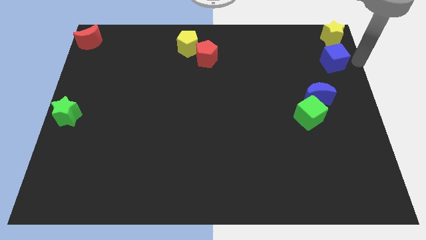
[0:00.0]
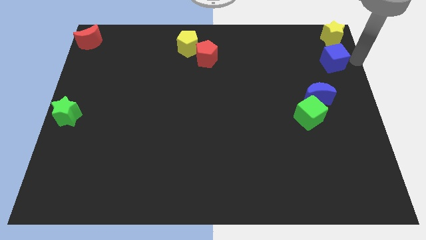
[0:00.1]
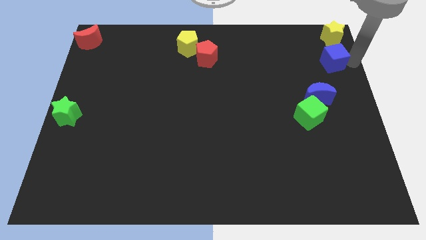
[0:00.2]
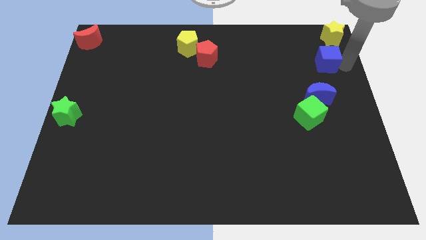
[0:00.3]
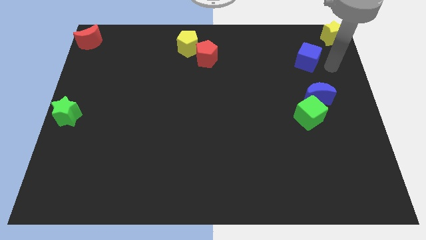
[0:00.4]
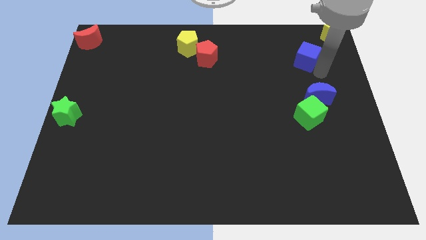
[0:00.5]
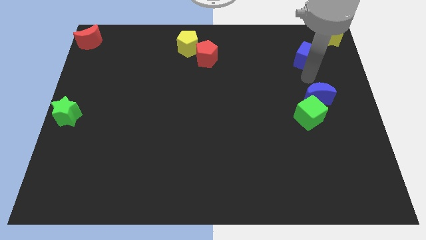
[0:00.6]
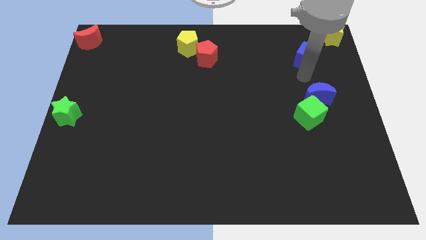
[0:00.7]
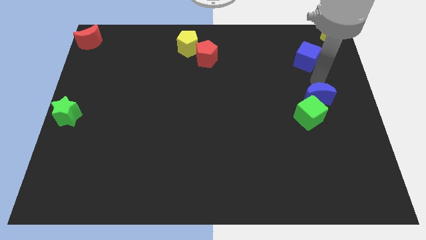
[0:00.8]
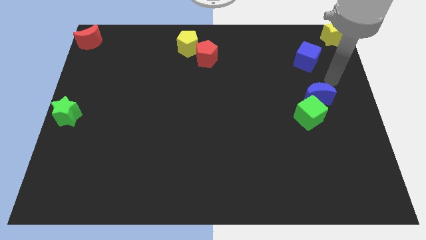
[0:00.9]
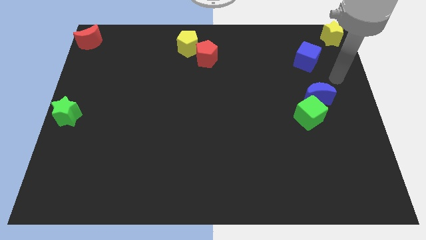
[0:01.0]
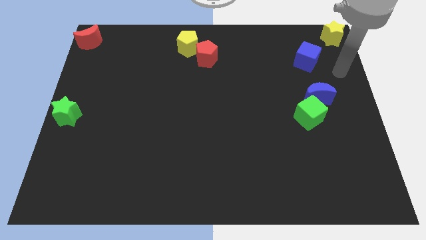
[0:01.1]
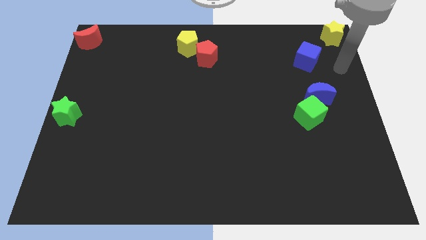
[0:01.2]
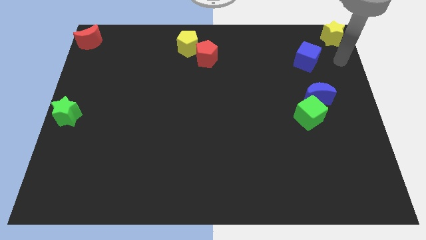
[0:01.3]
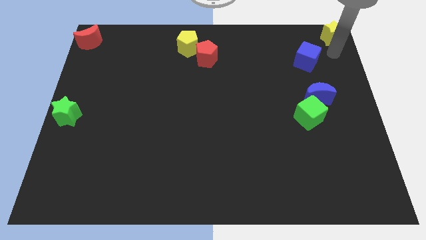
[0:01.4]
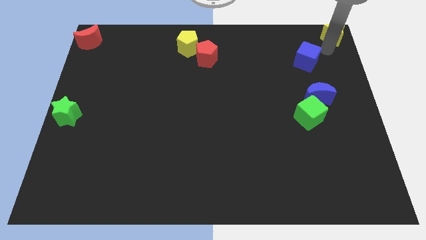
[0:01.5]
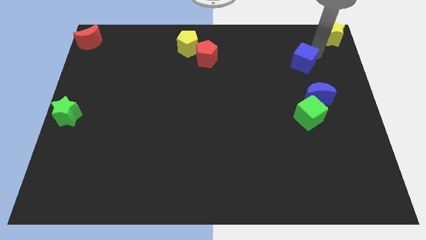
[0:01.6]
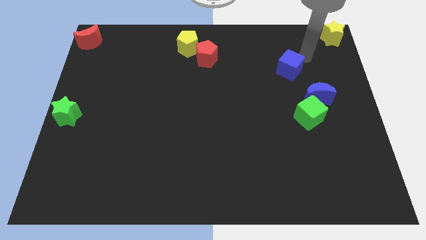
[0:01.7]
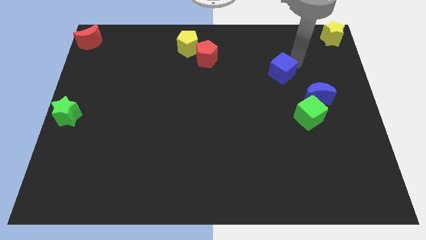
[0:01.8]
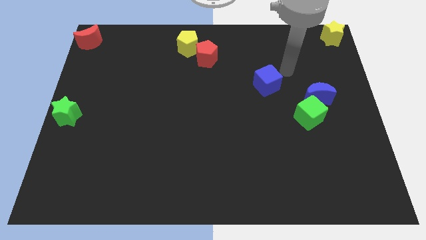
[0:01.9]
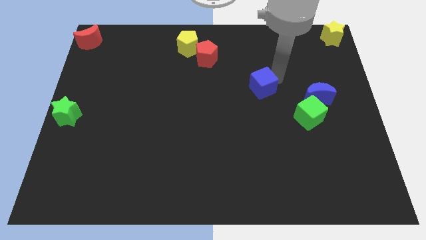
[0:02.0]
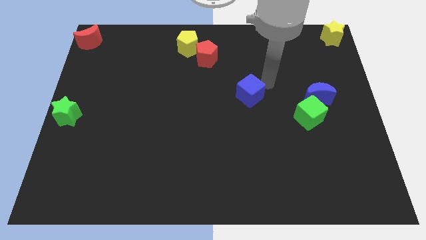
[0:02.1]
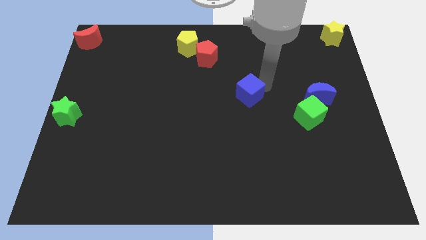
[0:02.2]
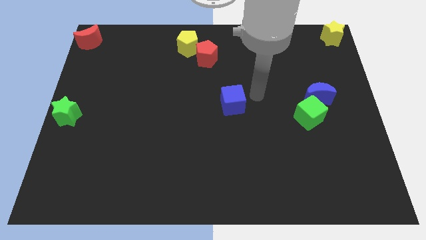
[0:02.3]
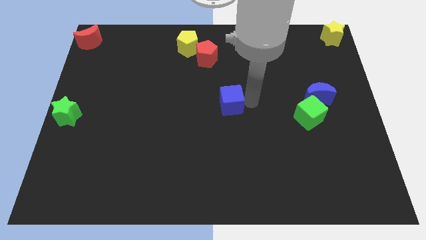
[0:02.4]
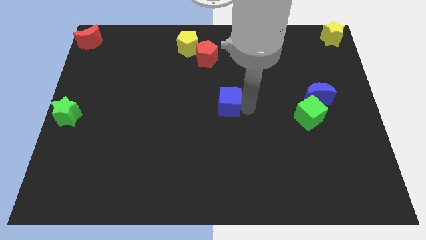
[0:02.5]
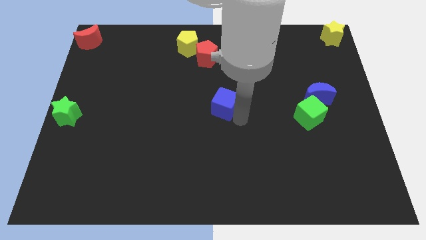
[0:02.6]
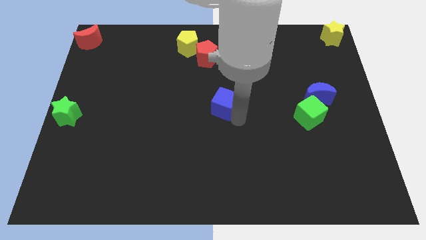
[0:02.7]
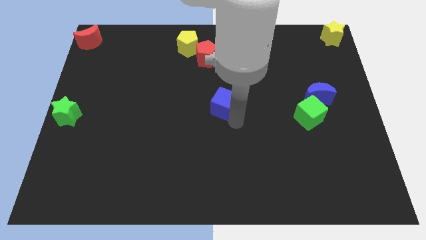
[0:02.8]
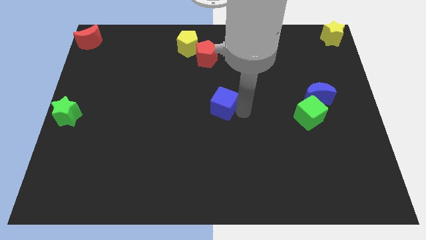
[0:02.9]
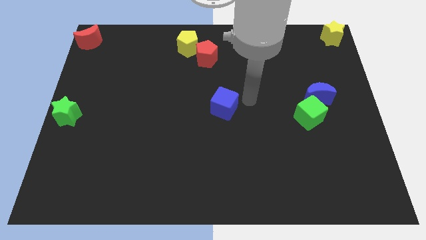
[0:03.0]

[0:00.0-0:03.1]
drag the blue cube to the center of the board

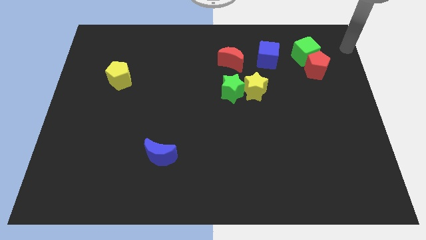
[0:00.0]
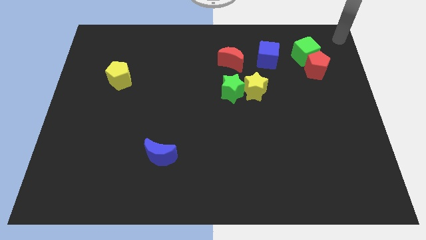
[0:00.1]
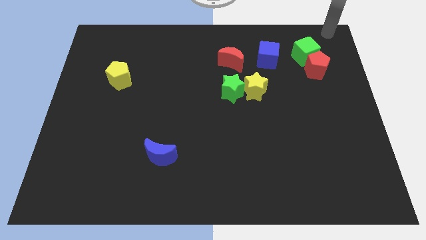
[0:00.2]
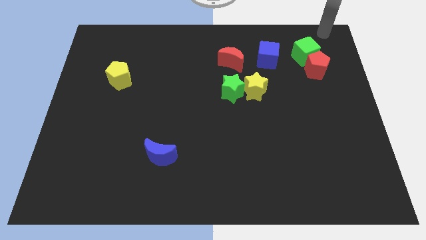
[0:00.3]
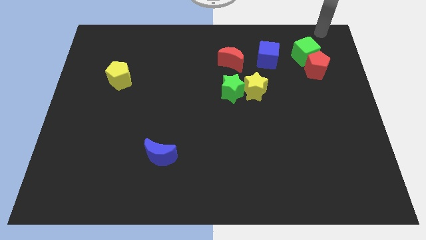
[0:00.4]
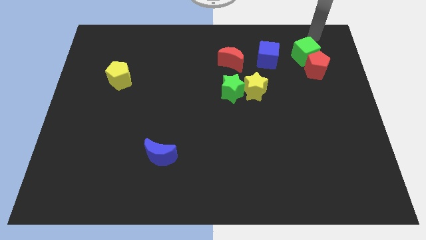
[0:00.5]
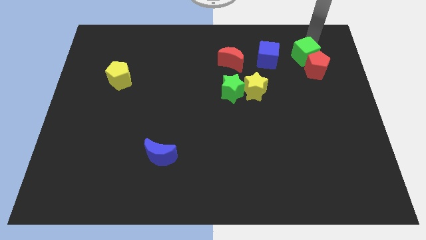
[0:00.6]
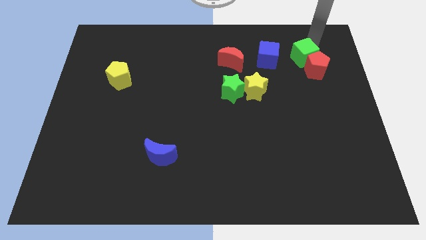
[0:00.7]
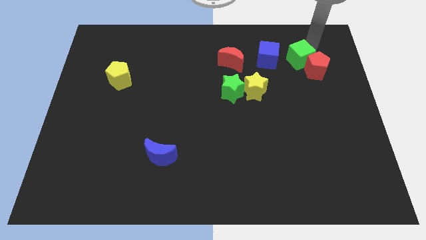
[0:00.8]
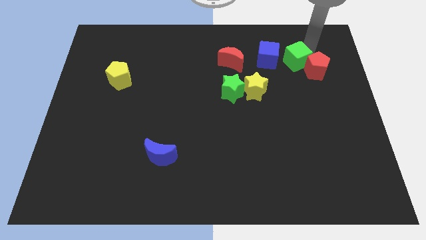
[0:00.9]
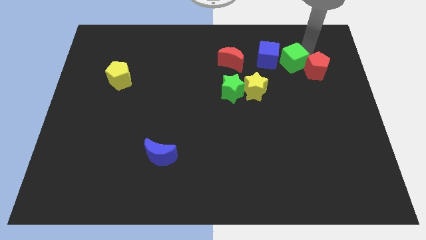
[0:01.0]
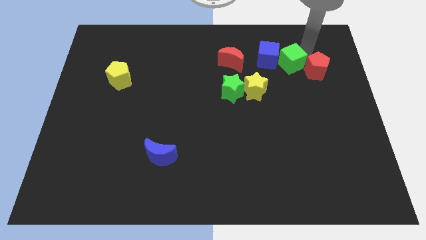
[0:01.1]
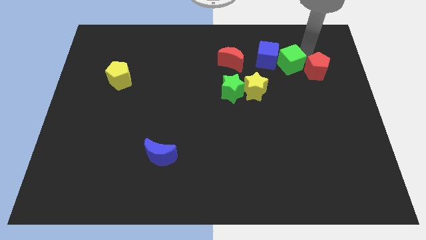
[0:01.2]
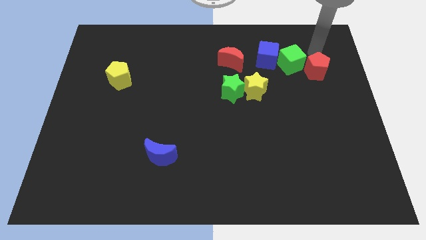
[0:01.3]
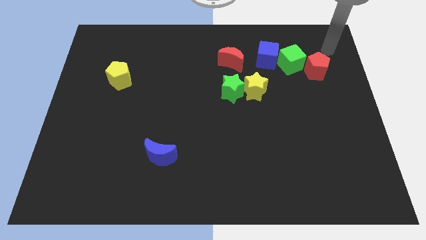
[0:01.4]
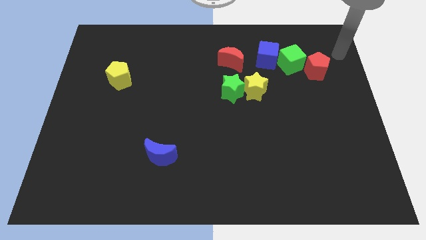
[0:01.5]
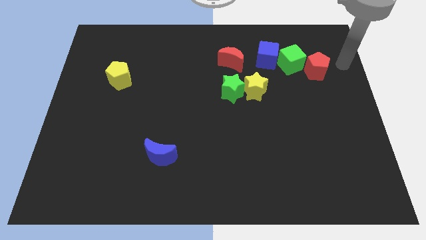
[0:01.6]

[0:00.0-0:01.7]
move the green cube close to the right of the blue cube

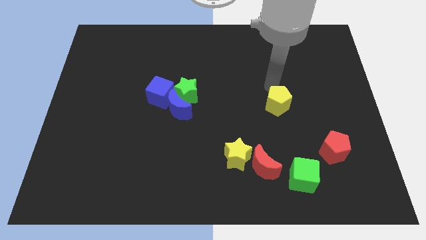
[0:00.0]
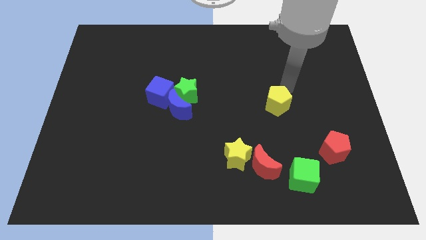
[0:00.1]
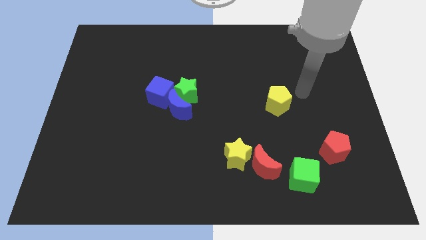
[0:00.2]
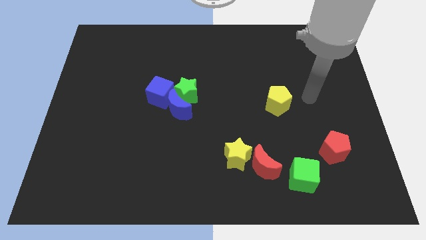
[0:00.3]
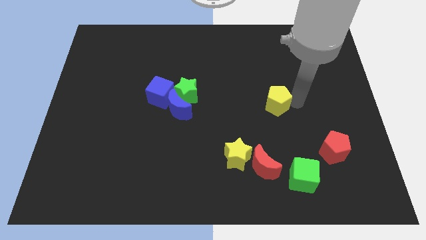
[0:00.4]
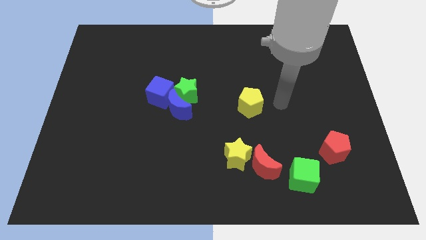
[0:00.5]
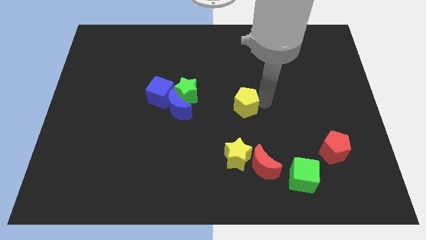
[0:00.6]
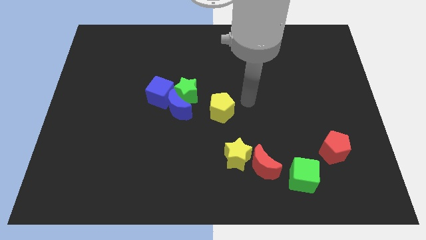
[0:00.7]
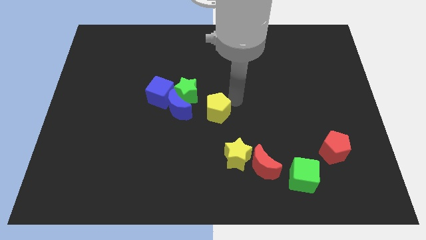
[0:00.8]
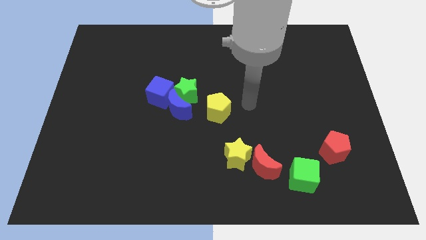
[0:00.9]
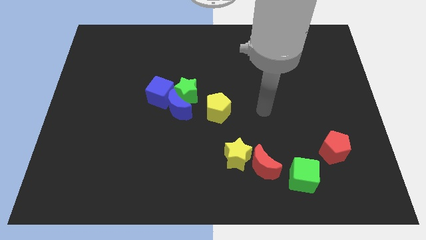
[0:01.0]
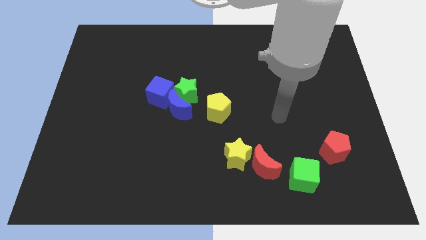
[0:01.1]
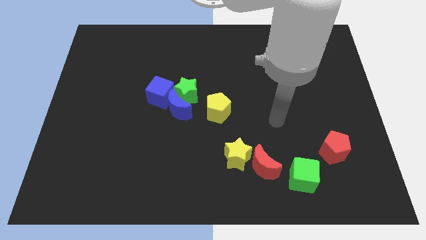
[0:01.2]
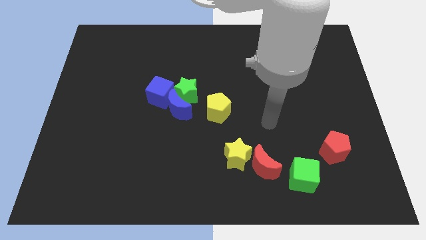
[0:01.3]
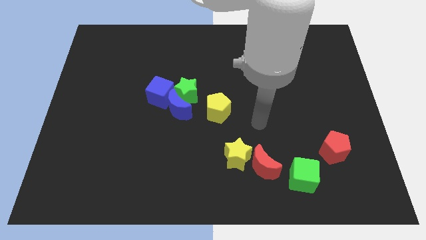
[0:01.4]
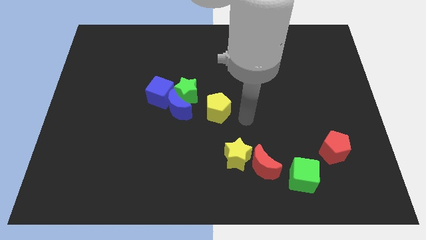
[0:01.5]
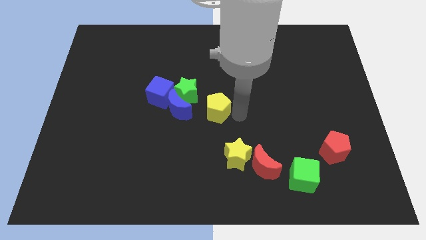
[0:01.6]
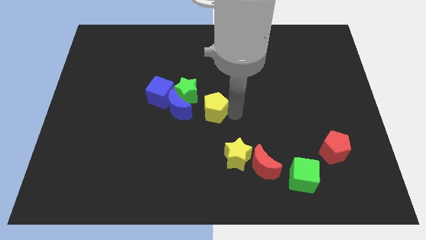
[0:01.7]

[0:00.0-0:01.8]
move the yellow pentagon below right to the green star

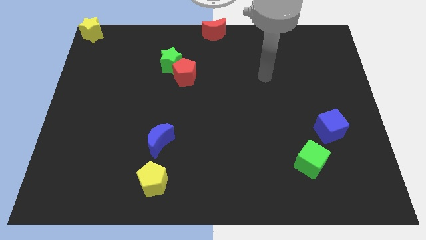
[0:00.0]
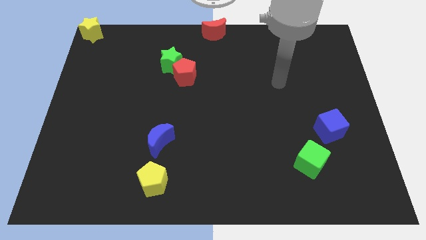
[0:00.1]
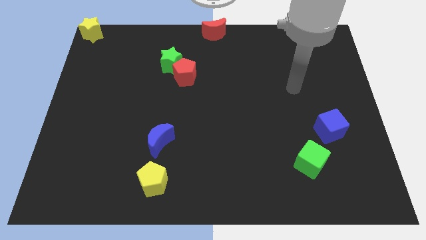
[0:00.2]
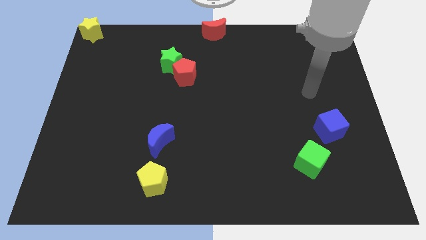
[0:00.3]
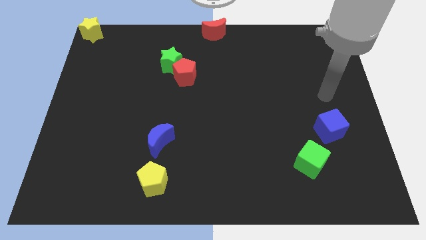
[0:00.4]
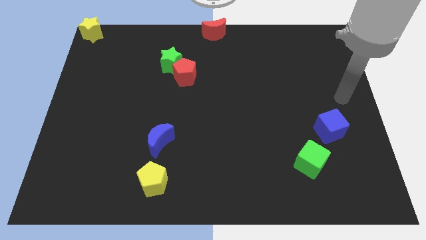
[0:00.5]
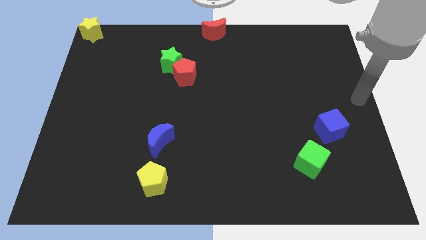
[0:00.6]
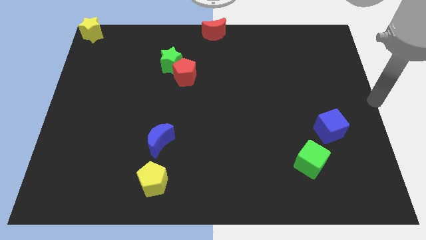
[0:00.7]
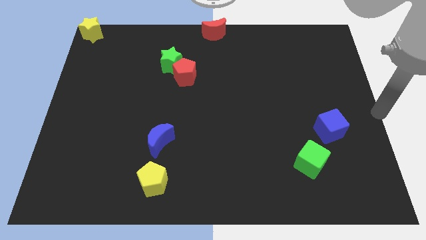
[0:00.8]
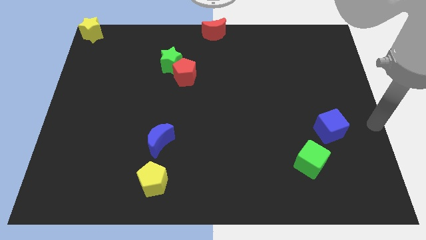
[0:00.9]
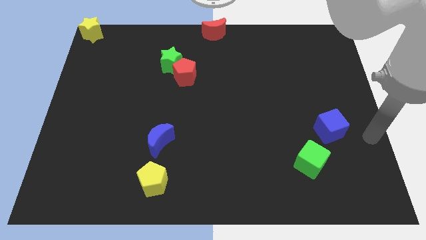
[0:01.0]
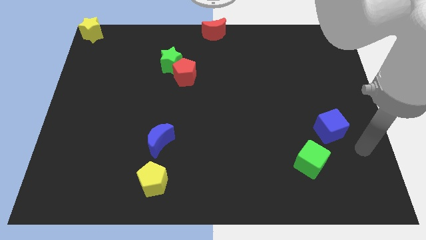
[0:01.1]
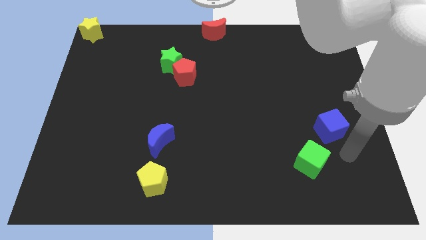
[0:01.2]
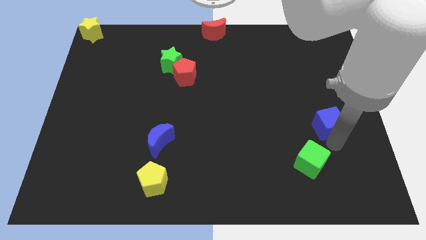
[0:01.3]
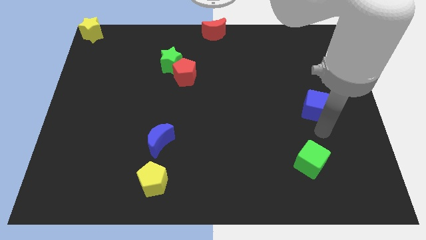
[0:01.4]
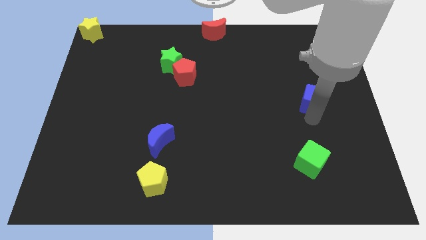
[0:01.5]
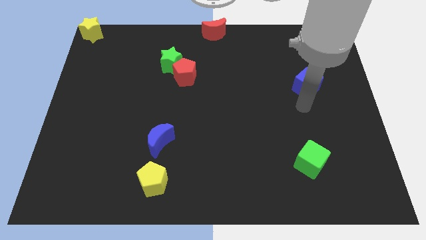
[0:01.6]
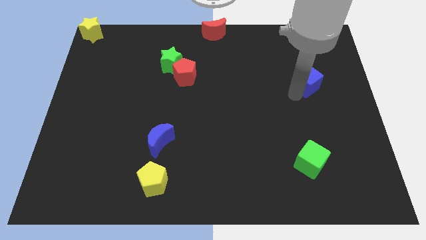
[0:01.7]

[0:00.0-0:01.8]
move the blue board towards top right side of the board

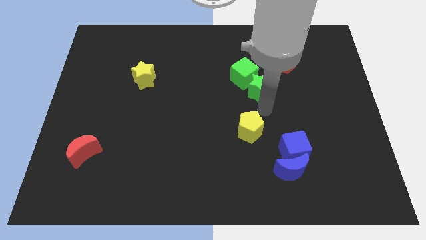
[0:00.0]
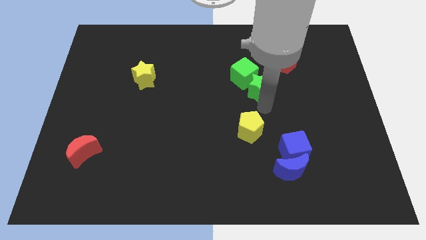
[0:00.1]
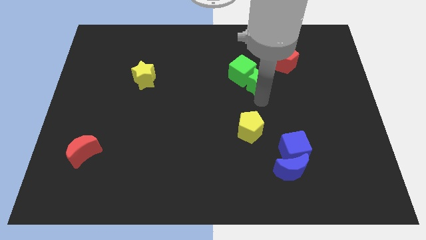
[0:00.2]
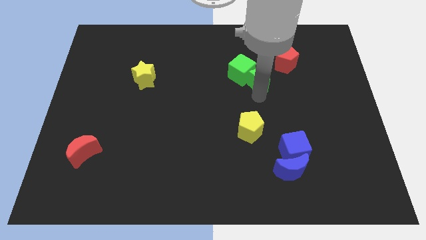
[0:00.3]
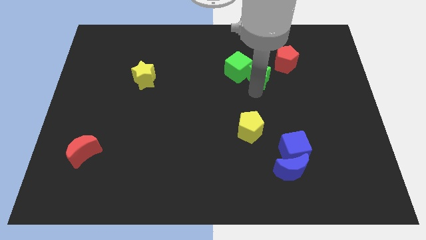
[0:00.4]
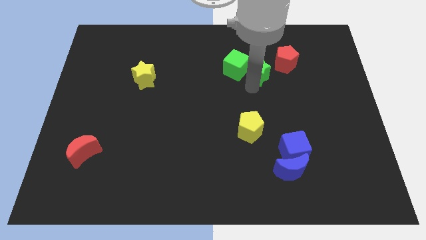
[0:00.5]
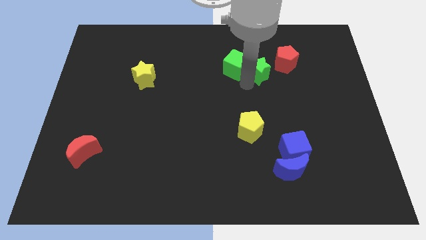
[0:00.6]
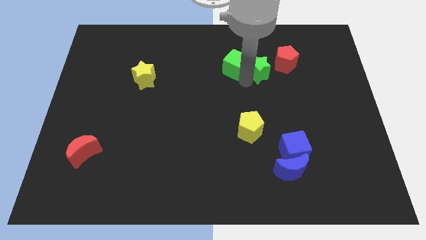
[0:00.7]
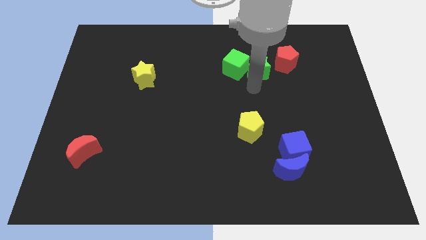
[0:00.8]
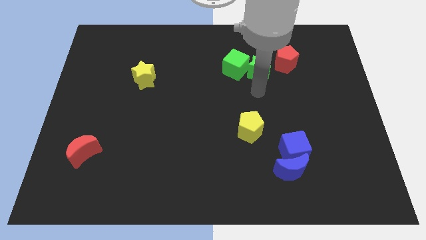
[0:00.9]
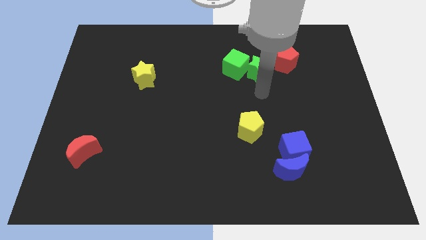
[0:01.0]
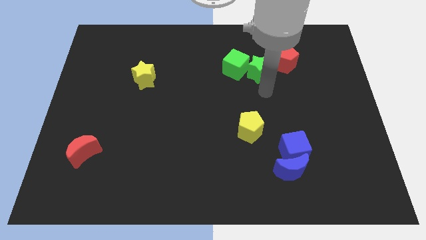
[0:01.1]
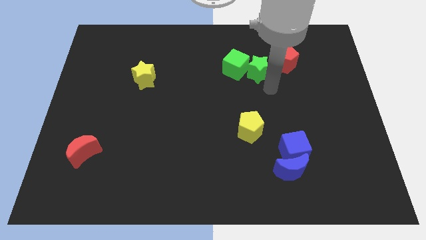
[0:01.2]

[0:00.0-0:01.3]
place the green blocks to the left side of red pentagon
